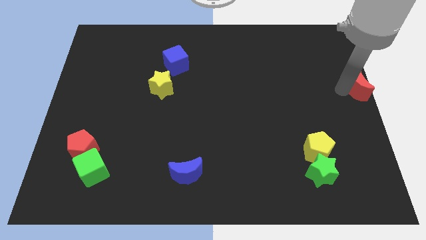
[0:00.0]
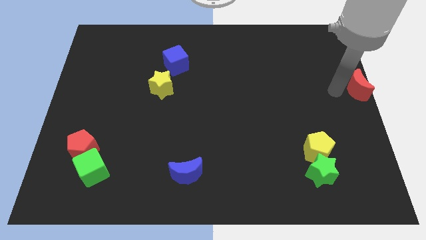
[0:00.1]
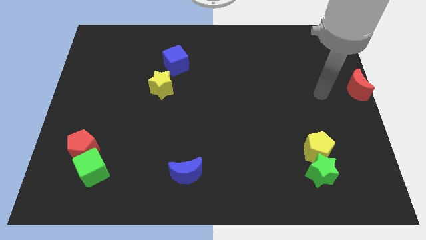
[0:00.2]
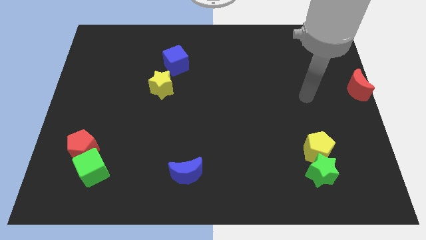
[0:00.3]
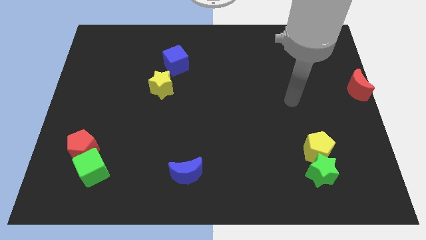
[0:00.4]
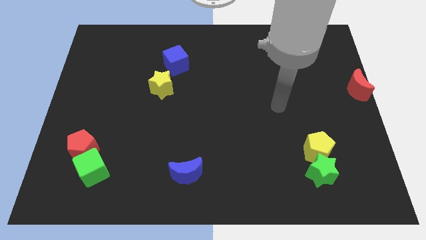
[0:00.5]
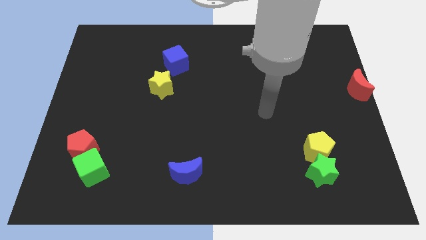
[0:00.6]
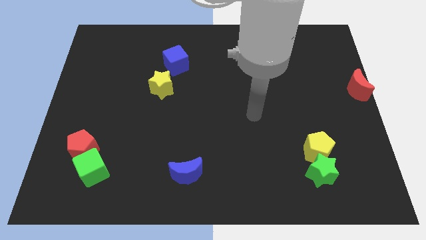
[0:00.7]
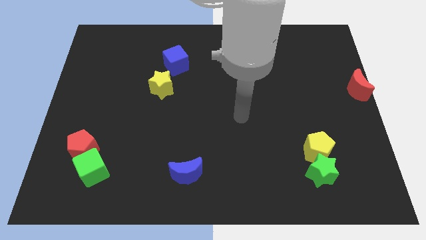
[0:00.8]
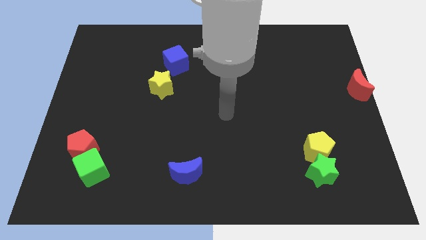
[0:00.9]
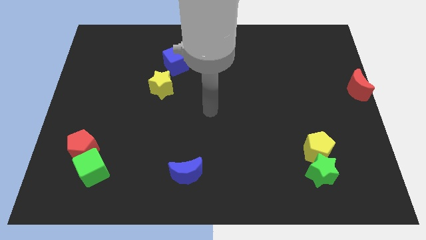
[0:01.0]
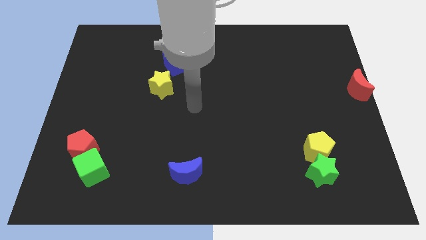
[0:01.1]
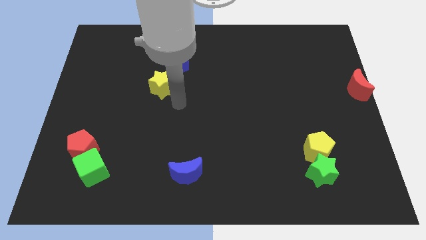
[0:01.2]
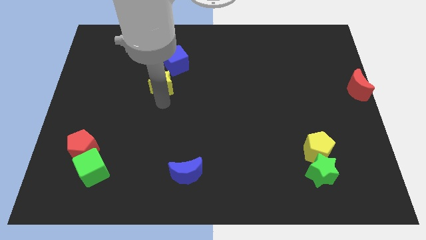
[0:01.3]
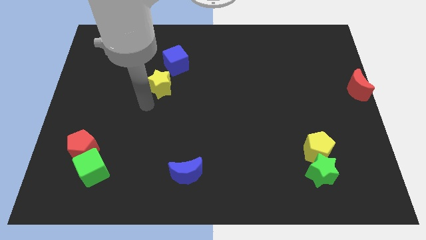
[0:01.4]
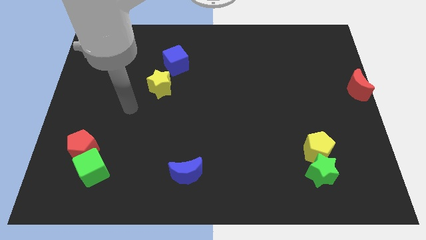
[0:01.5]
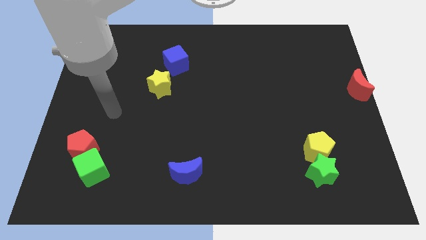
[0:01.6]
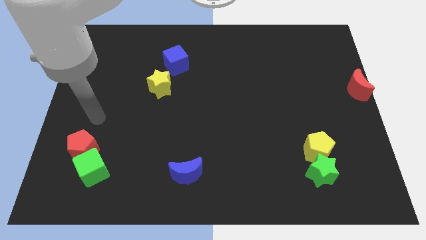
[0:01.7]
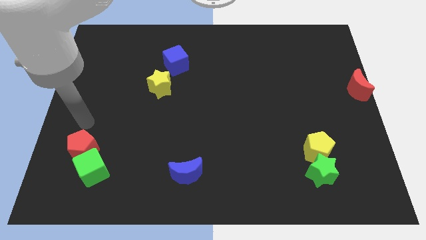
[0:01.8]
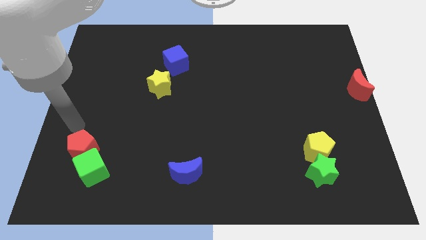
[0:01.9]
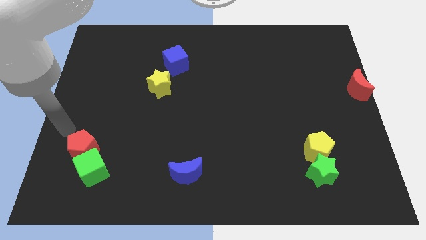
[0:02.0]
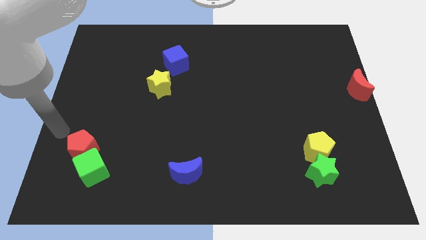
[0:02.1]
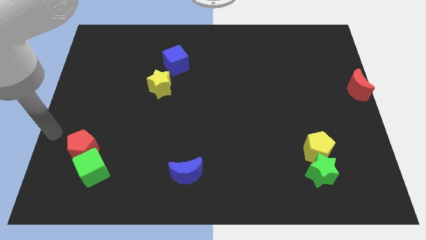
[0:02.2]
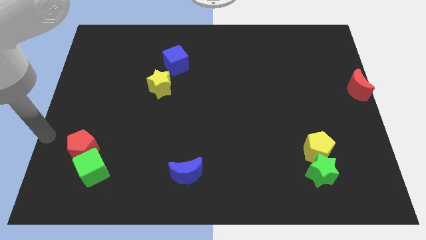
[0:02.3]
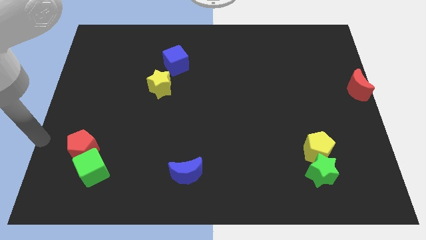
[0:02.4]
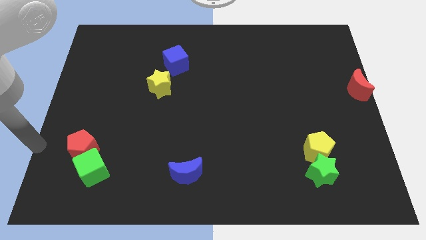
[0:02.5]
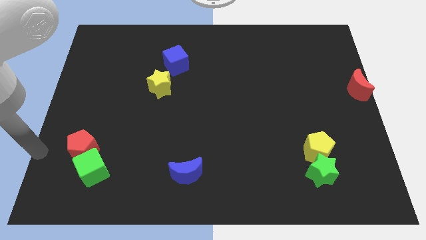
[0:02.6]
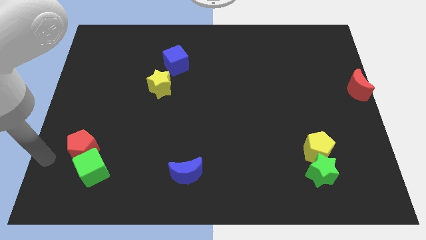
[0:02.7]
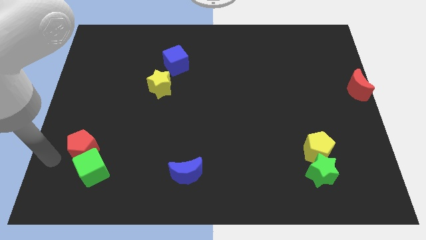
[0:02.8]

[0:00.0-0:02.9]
move your arm to the red pentagon

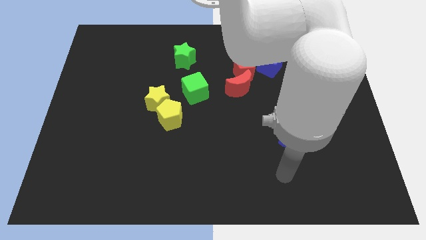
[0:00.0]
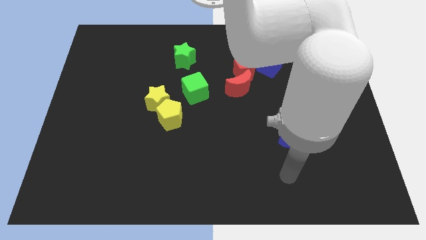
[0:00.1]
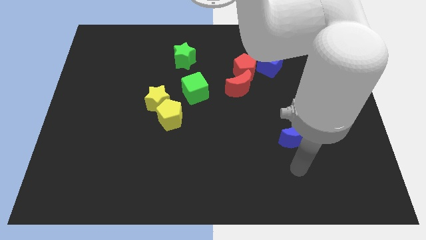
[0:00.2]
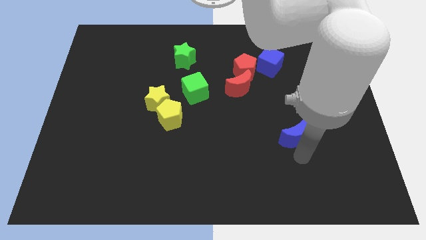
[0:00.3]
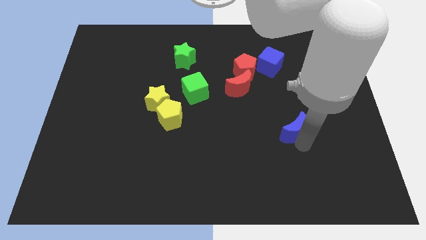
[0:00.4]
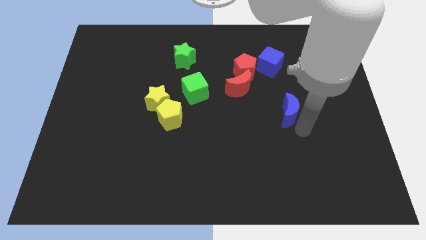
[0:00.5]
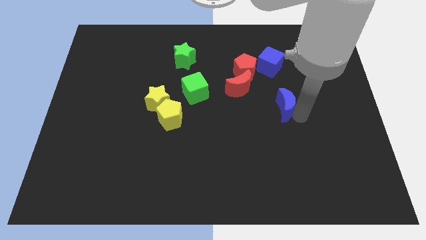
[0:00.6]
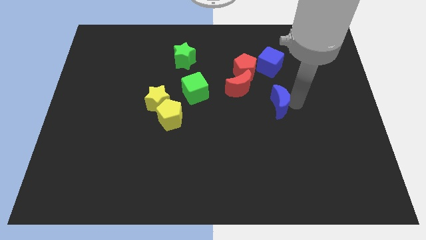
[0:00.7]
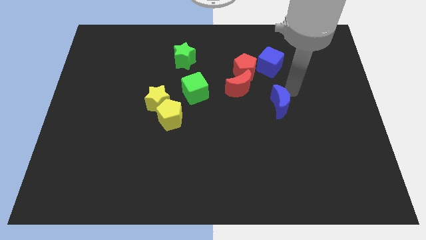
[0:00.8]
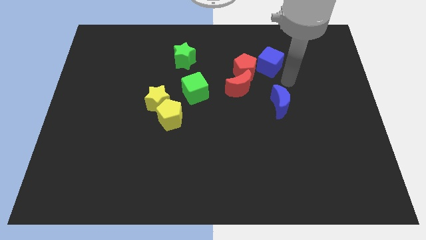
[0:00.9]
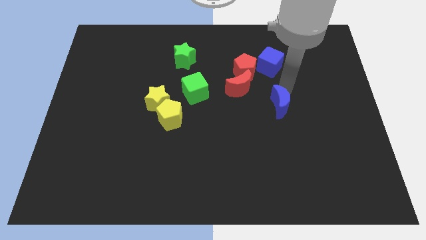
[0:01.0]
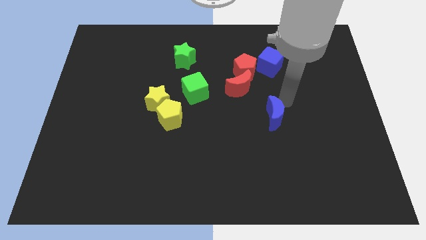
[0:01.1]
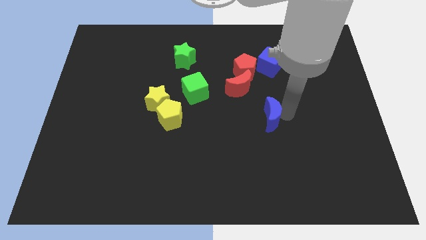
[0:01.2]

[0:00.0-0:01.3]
push the blue crescent to the bottom of the blue cube

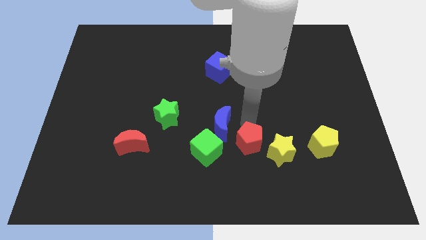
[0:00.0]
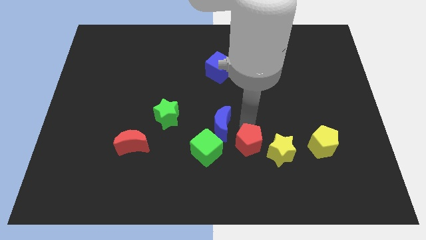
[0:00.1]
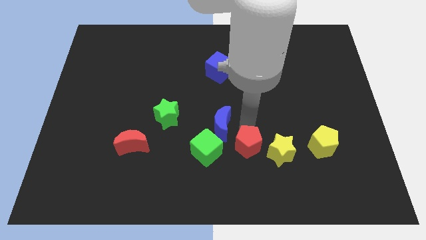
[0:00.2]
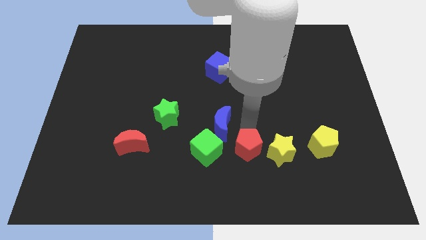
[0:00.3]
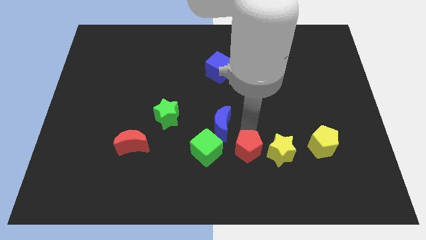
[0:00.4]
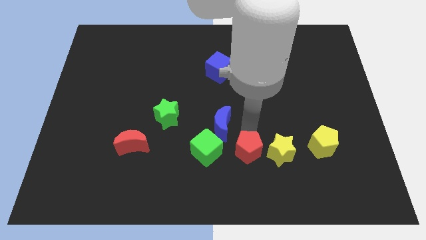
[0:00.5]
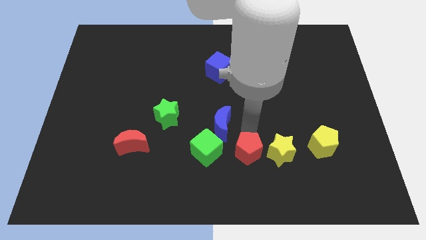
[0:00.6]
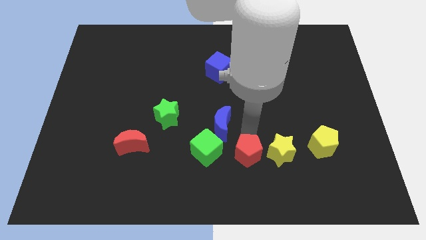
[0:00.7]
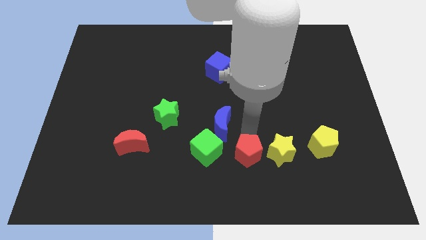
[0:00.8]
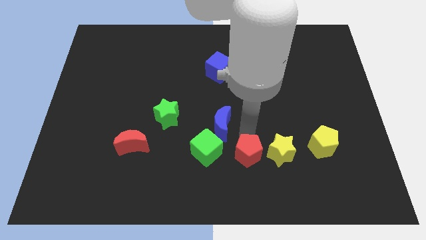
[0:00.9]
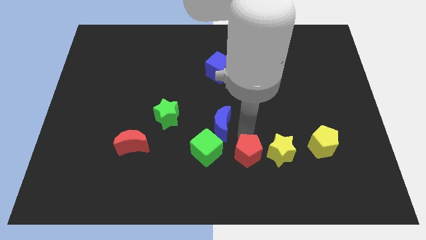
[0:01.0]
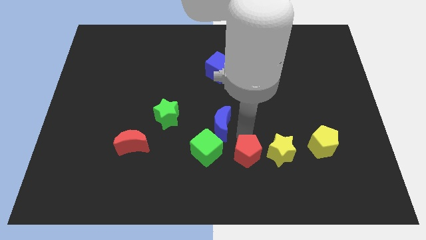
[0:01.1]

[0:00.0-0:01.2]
place the red pentagon to the right of green cube

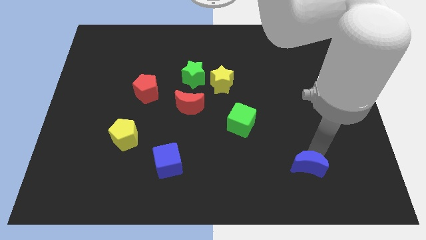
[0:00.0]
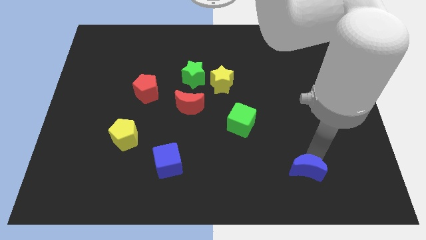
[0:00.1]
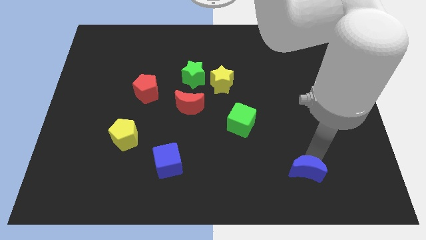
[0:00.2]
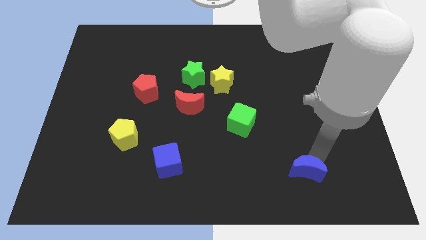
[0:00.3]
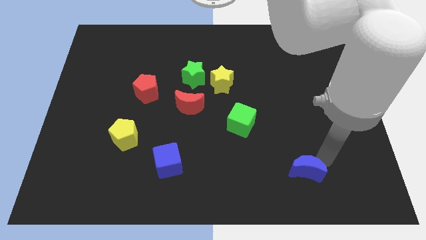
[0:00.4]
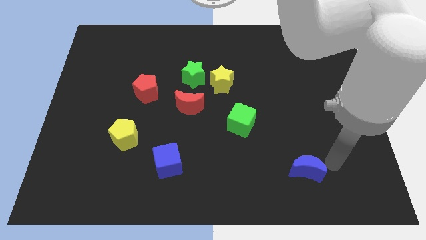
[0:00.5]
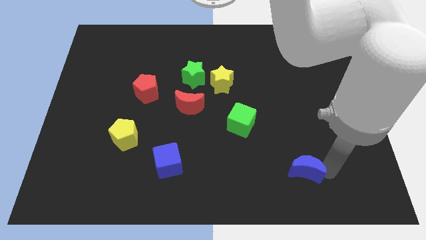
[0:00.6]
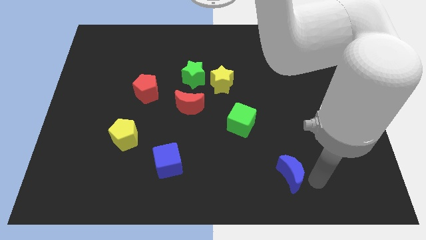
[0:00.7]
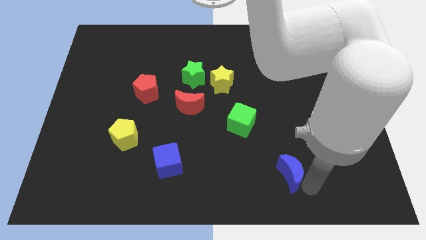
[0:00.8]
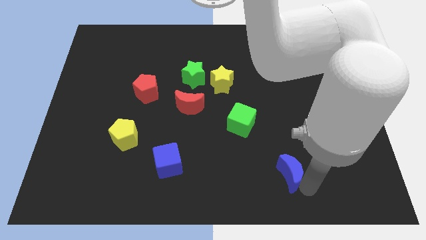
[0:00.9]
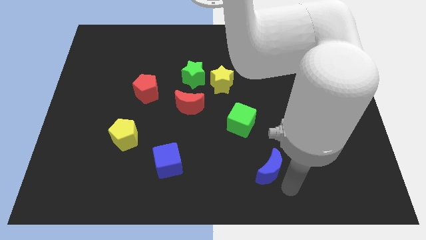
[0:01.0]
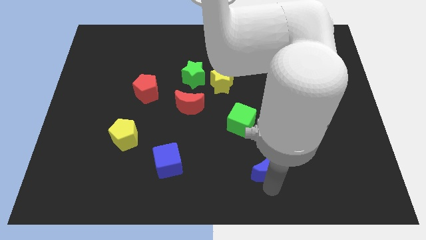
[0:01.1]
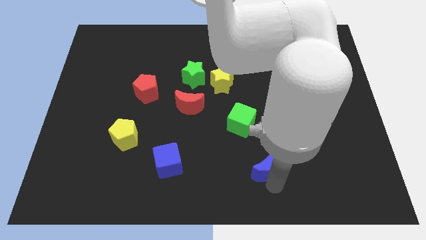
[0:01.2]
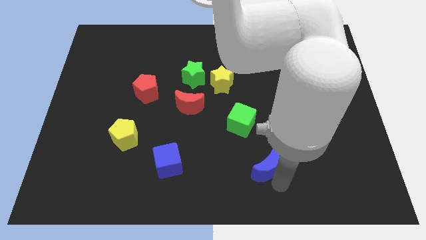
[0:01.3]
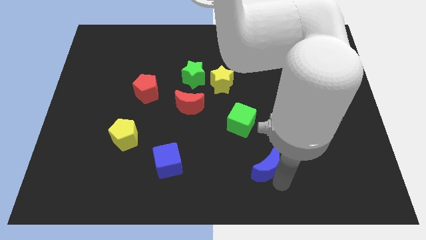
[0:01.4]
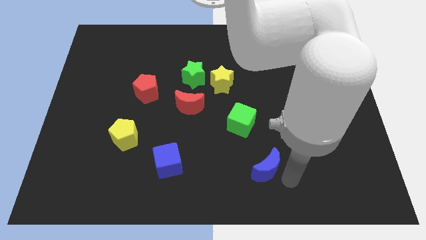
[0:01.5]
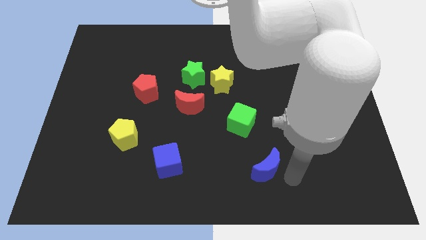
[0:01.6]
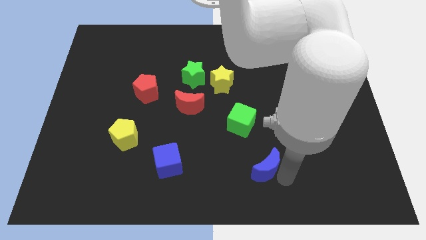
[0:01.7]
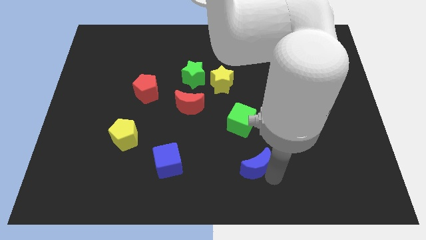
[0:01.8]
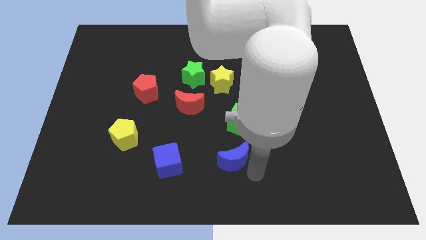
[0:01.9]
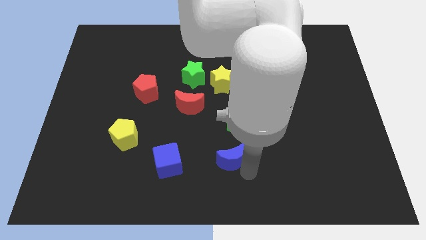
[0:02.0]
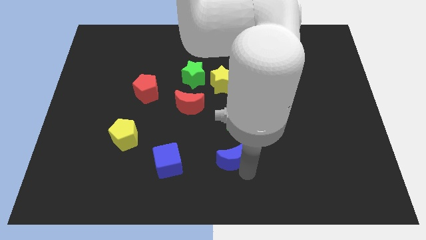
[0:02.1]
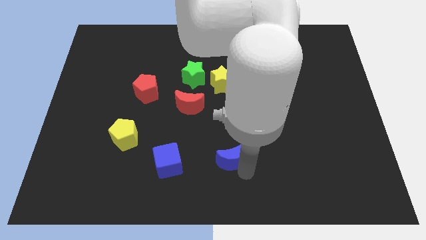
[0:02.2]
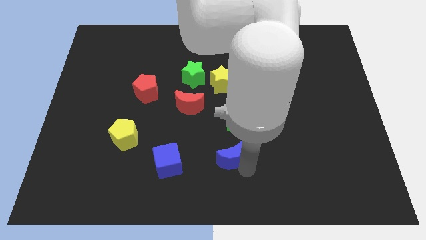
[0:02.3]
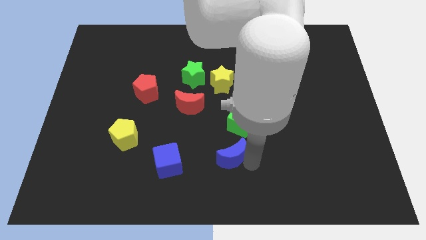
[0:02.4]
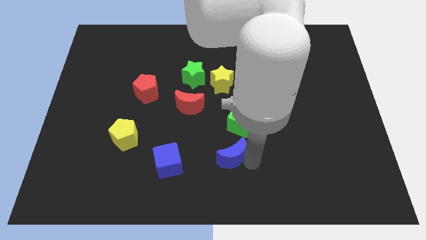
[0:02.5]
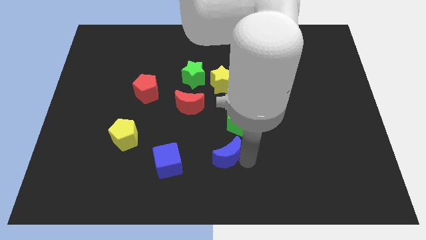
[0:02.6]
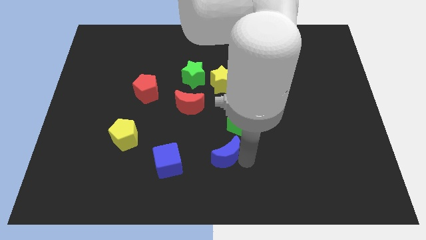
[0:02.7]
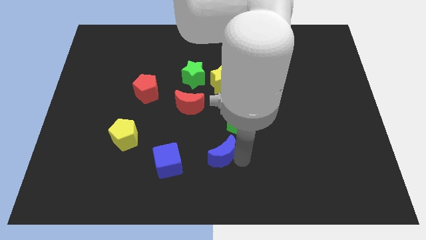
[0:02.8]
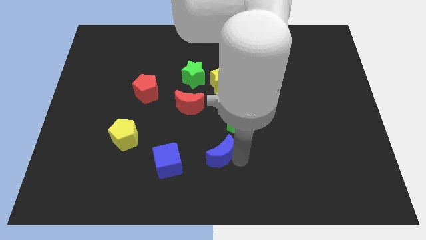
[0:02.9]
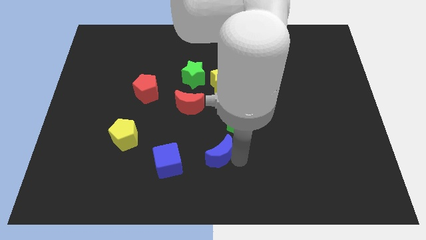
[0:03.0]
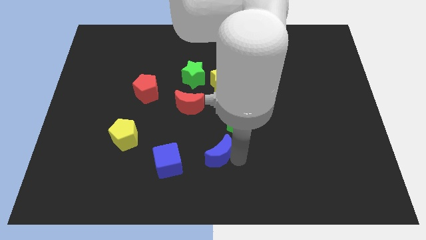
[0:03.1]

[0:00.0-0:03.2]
move the blue cube to the bottom left to the green cube

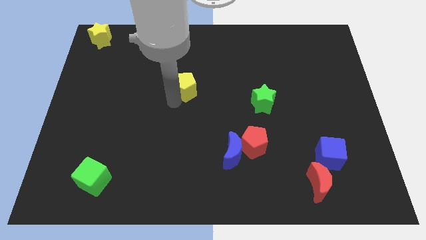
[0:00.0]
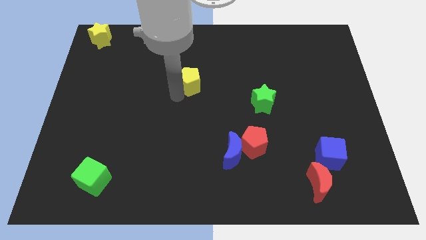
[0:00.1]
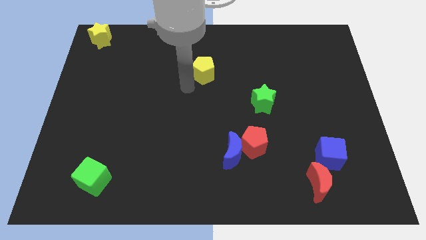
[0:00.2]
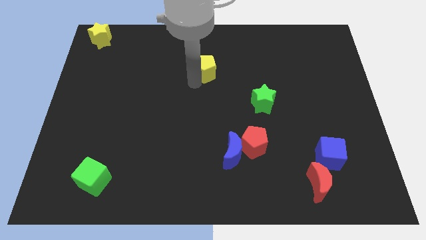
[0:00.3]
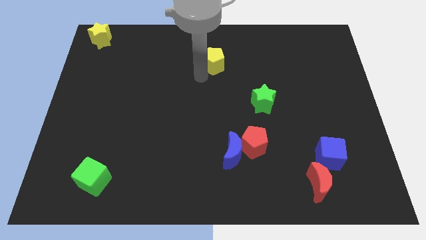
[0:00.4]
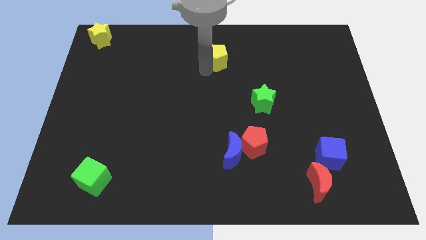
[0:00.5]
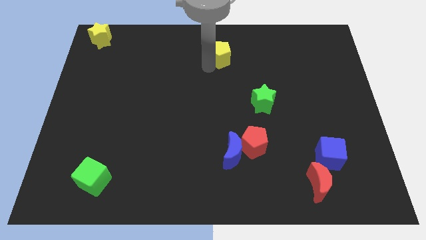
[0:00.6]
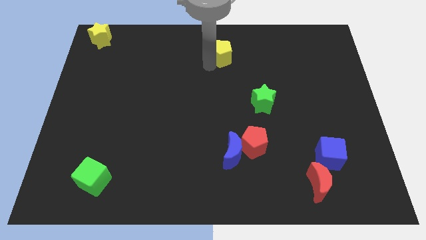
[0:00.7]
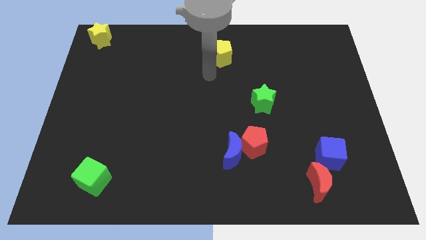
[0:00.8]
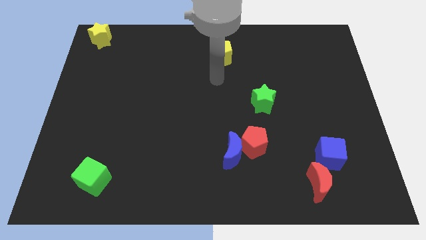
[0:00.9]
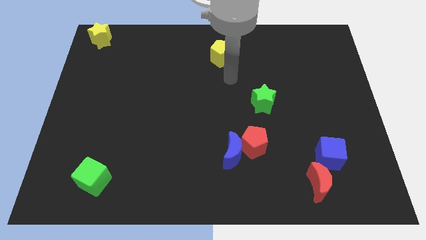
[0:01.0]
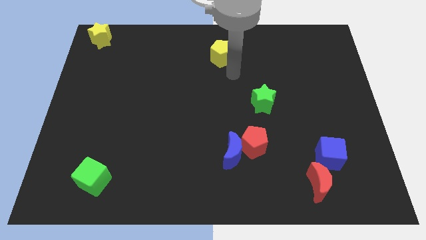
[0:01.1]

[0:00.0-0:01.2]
place the yellow pentagon above the blue moon
